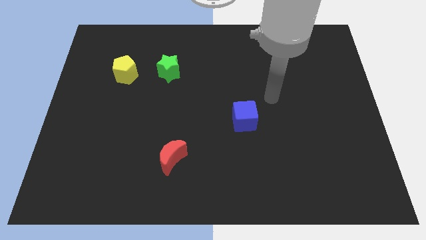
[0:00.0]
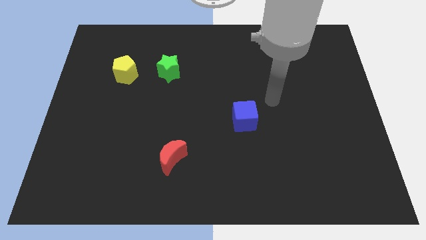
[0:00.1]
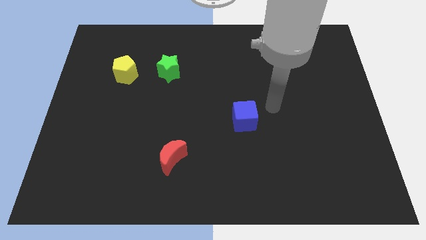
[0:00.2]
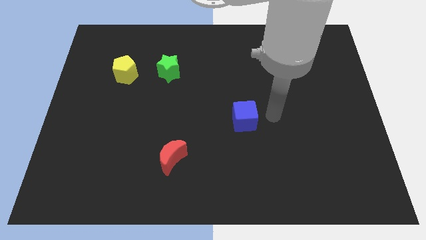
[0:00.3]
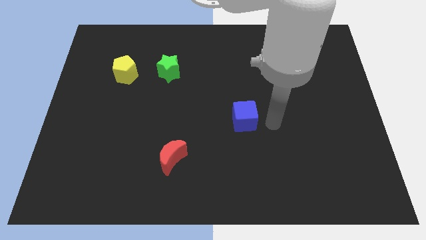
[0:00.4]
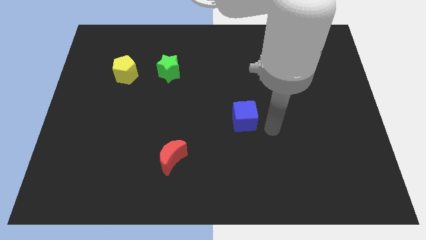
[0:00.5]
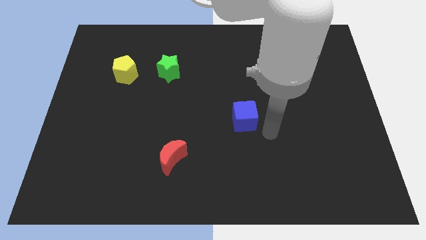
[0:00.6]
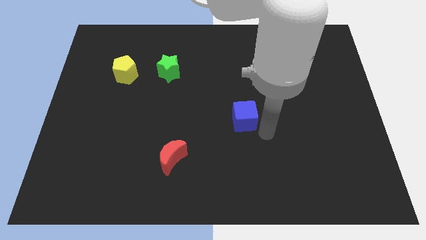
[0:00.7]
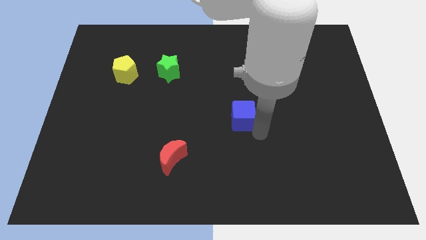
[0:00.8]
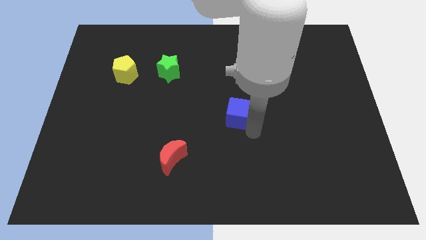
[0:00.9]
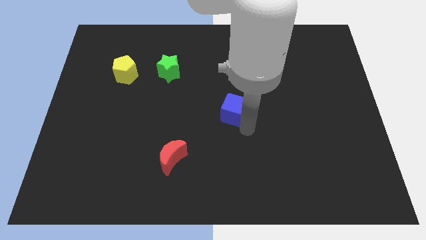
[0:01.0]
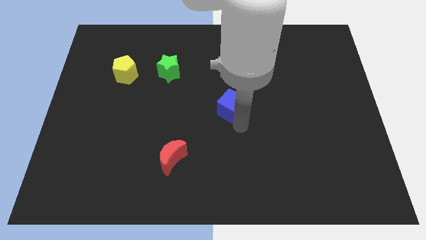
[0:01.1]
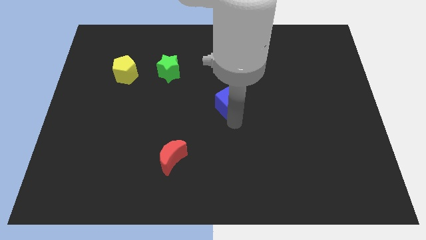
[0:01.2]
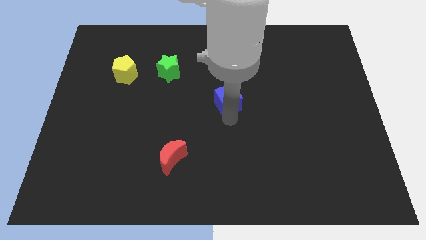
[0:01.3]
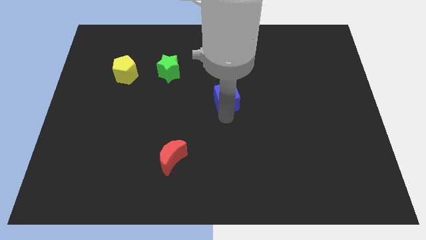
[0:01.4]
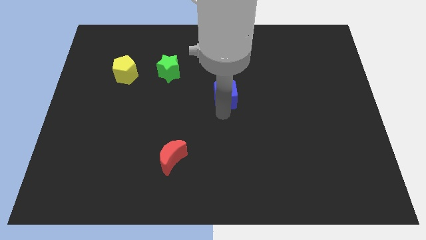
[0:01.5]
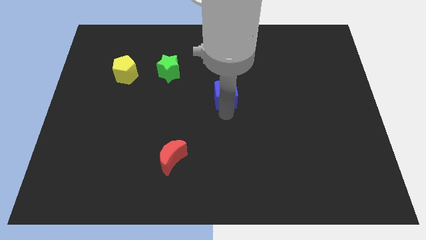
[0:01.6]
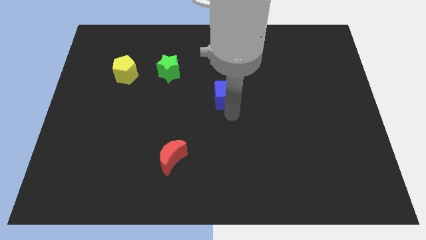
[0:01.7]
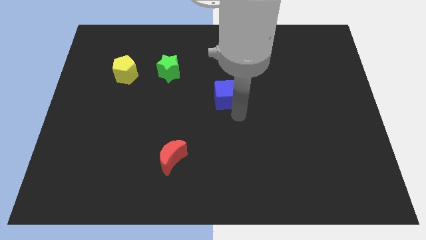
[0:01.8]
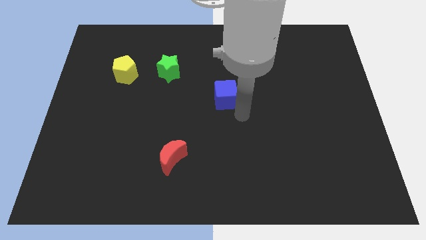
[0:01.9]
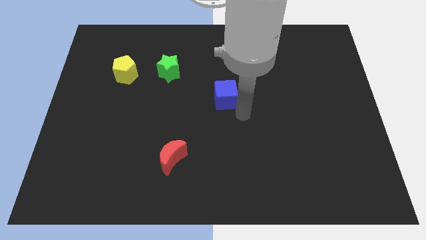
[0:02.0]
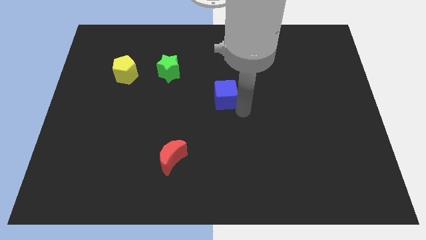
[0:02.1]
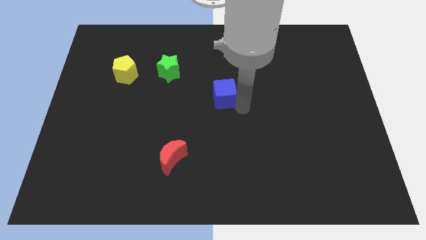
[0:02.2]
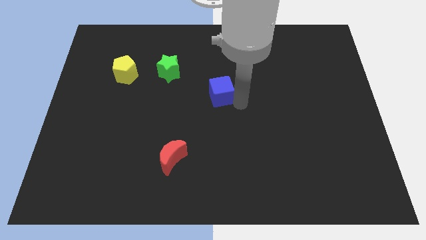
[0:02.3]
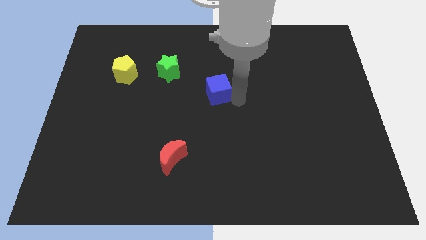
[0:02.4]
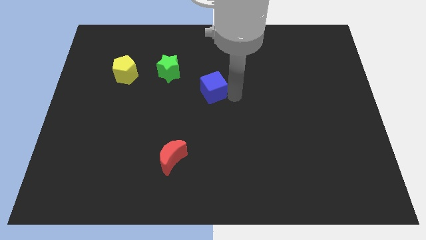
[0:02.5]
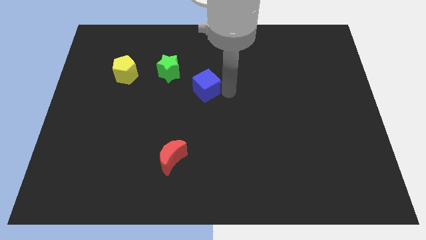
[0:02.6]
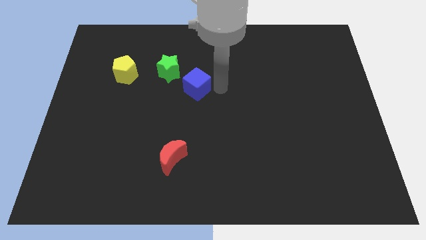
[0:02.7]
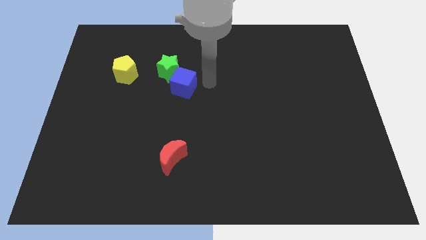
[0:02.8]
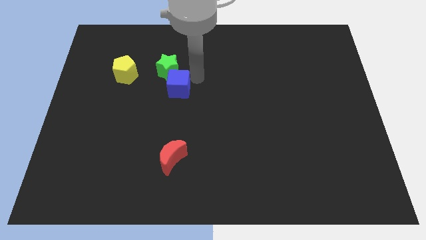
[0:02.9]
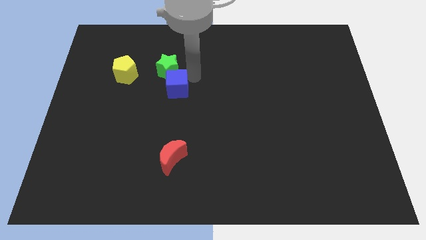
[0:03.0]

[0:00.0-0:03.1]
put the blue block close to the star

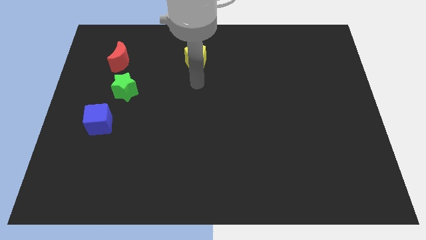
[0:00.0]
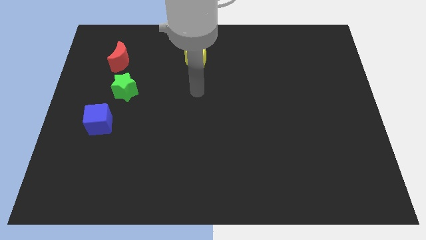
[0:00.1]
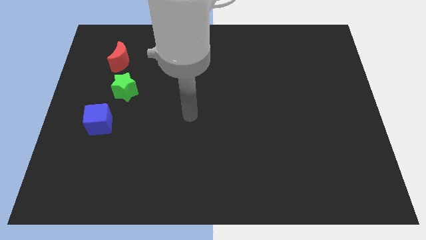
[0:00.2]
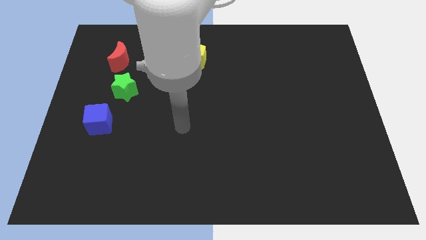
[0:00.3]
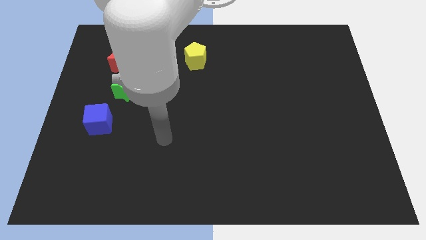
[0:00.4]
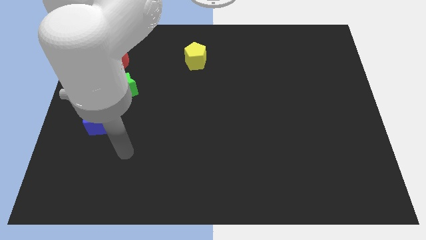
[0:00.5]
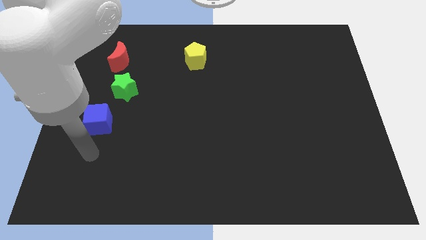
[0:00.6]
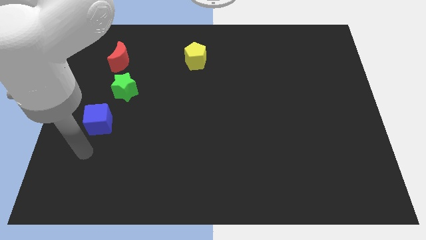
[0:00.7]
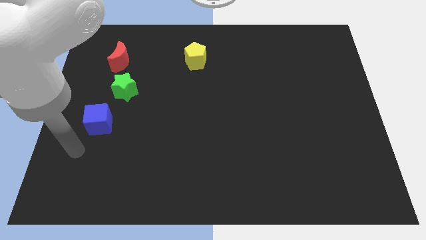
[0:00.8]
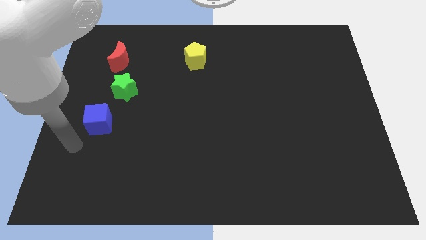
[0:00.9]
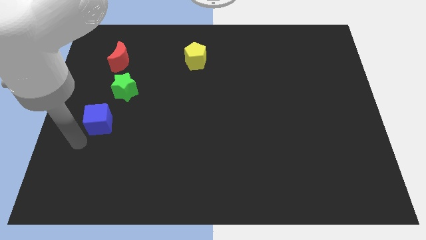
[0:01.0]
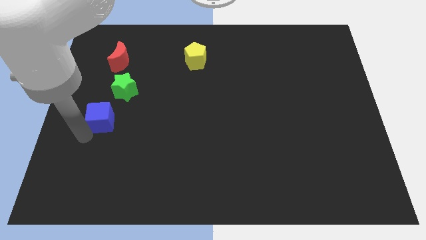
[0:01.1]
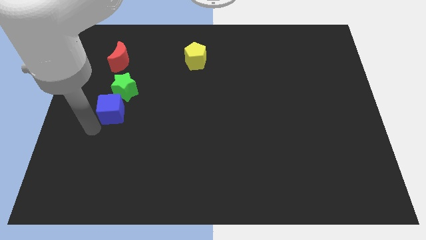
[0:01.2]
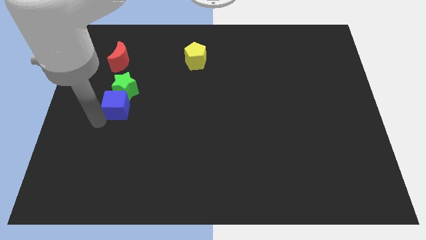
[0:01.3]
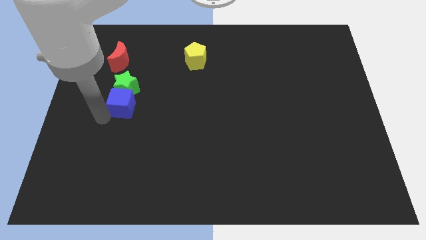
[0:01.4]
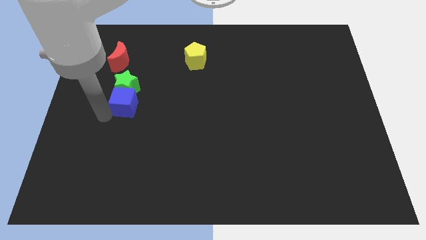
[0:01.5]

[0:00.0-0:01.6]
slide the blue block to the green block

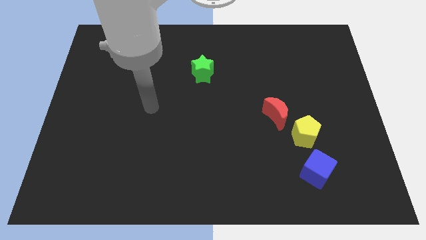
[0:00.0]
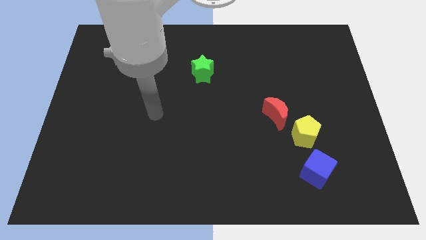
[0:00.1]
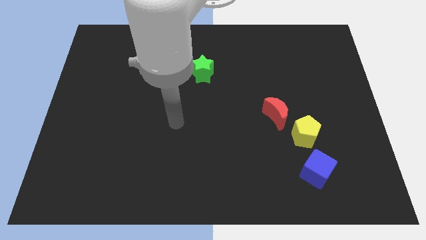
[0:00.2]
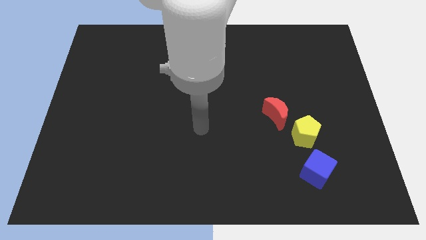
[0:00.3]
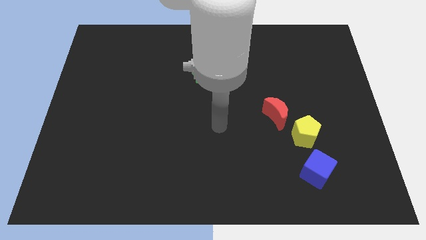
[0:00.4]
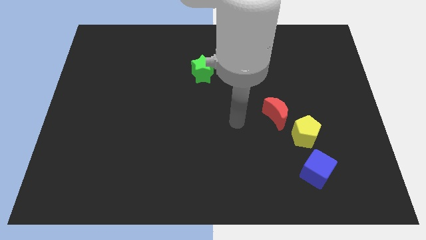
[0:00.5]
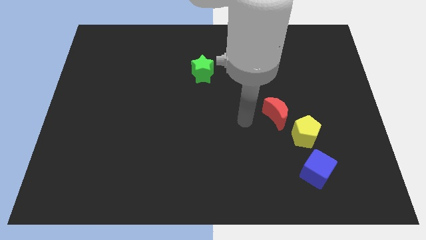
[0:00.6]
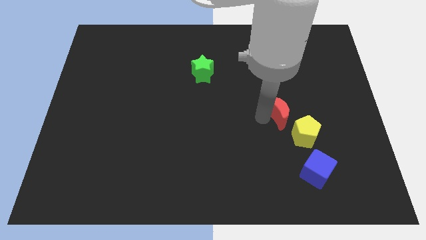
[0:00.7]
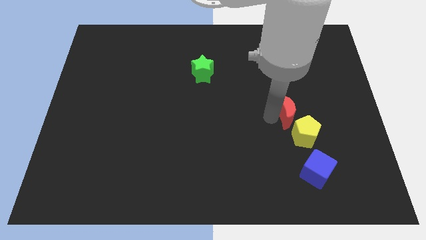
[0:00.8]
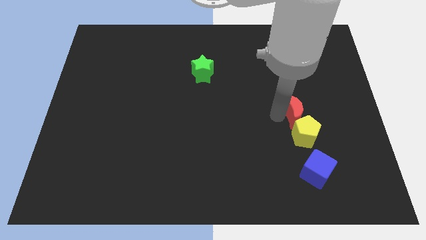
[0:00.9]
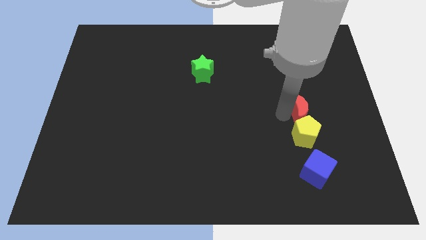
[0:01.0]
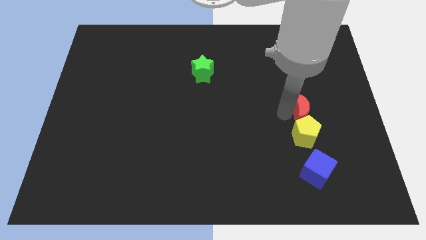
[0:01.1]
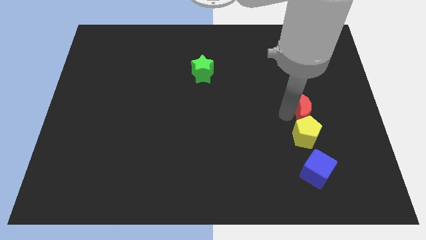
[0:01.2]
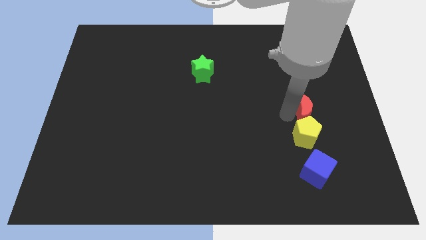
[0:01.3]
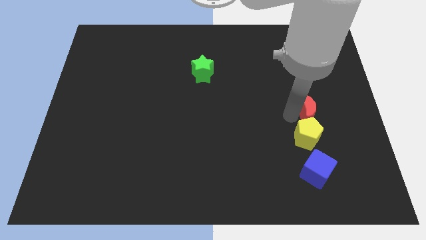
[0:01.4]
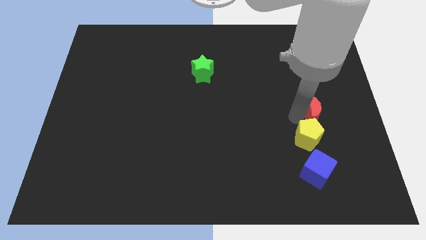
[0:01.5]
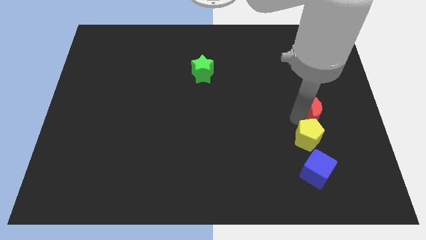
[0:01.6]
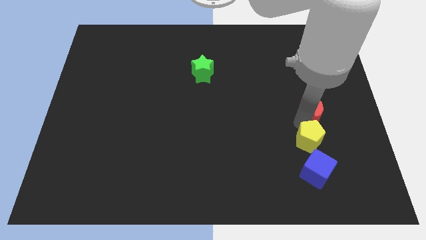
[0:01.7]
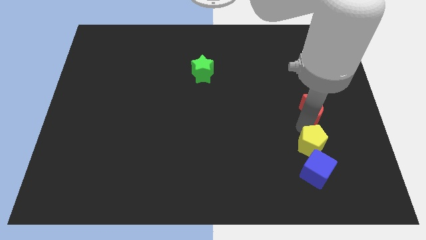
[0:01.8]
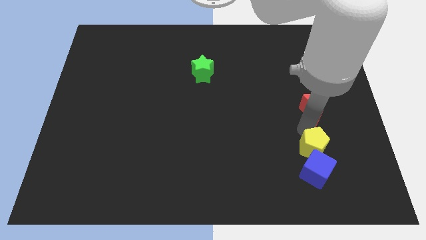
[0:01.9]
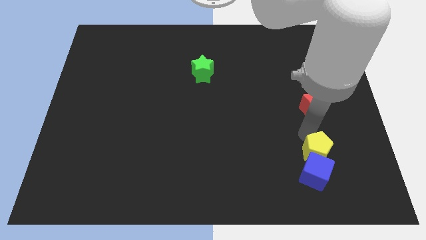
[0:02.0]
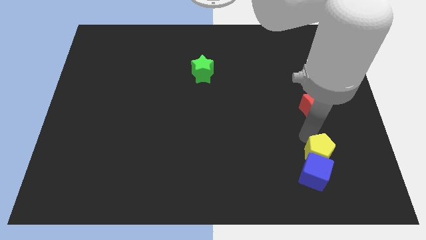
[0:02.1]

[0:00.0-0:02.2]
push the yellow block next to the cube

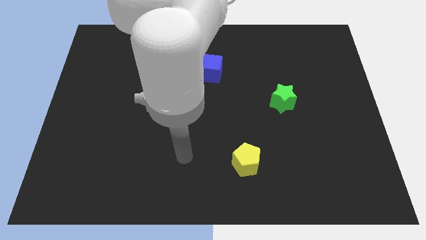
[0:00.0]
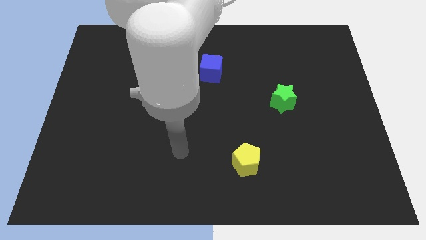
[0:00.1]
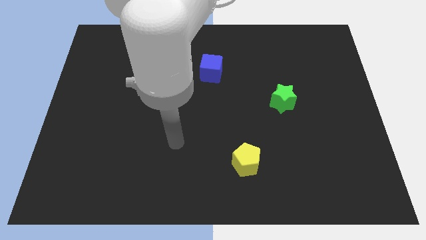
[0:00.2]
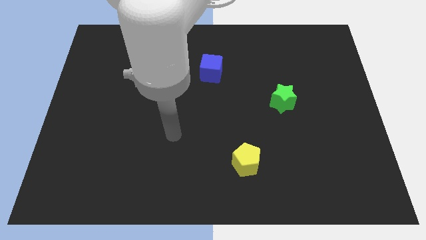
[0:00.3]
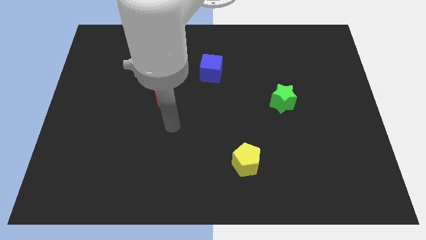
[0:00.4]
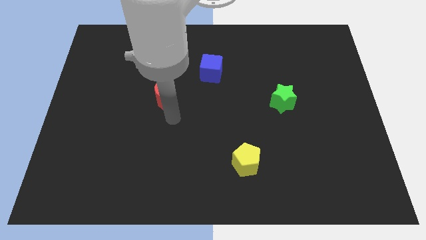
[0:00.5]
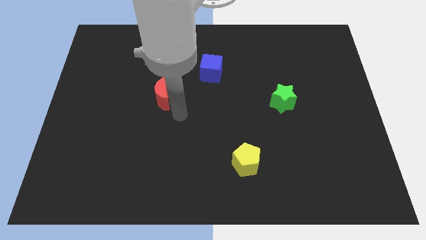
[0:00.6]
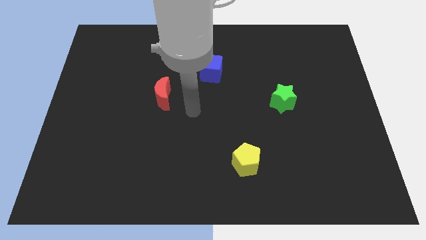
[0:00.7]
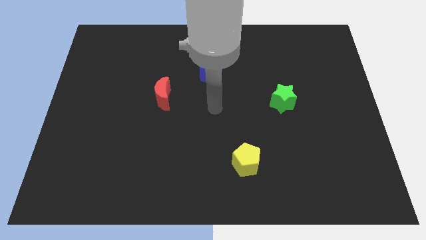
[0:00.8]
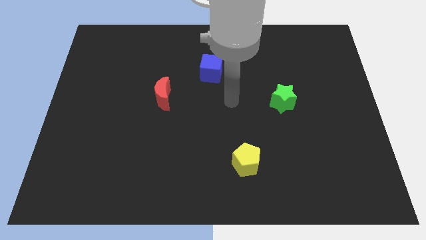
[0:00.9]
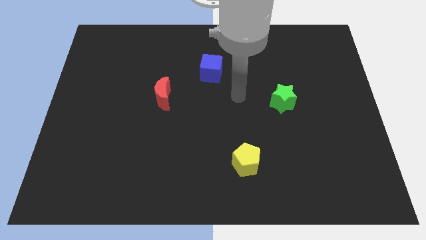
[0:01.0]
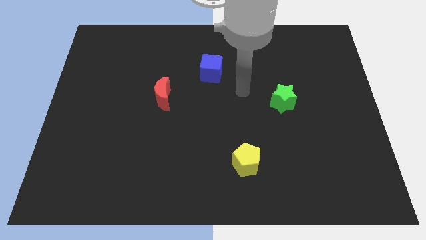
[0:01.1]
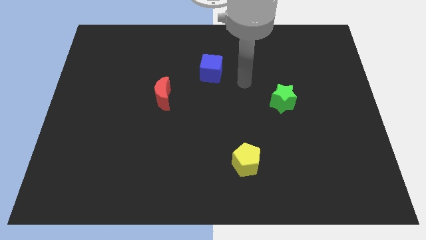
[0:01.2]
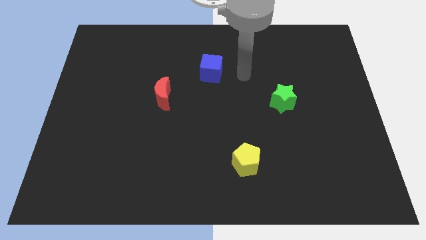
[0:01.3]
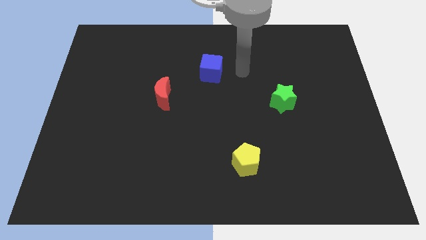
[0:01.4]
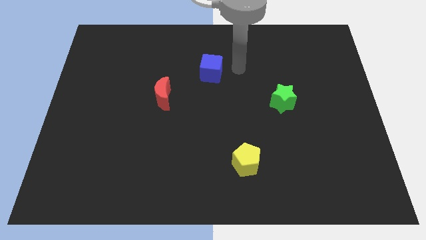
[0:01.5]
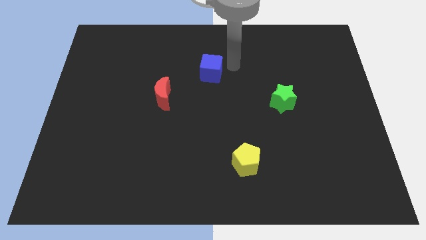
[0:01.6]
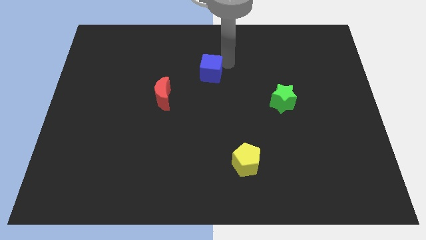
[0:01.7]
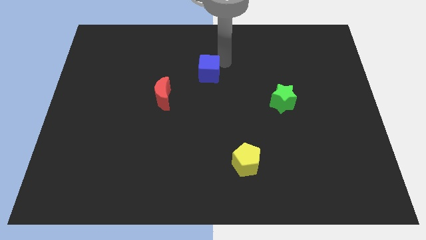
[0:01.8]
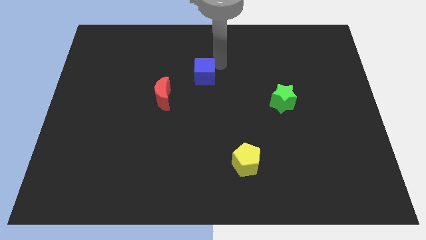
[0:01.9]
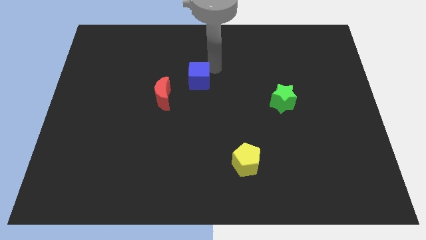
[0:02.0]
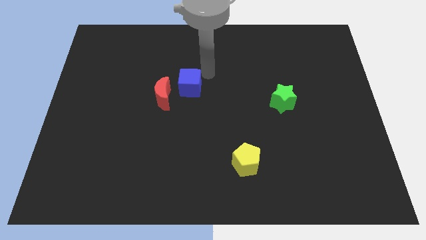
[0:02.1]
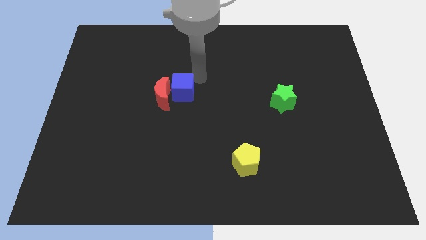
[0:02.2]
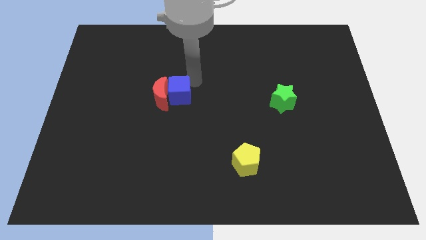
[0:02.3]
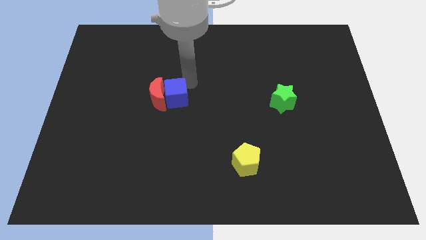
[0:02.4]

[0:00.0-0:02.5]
move the cube towards the moon
